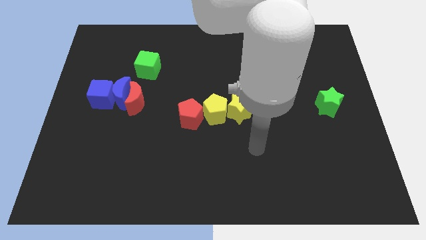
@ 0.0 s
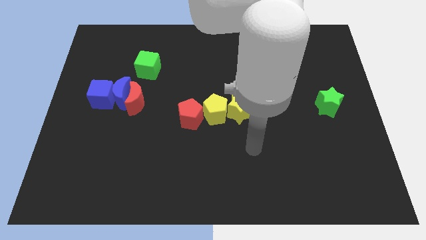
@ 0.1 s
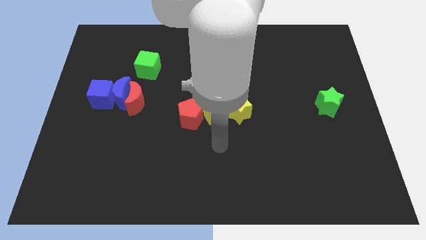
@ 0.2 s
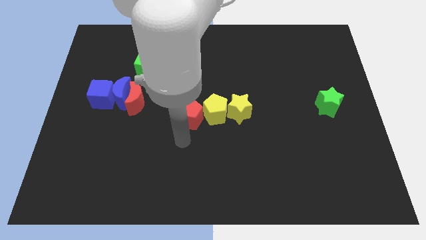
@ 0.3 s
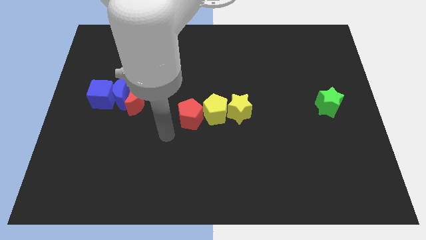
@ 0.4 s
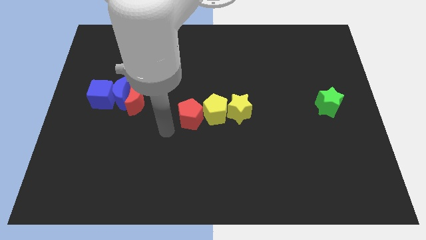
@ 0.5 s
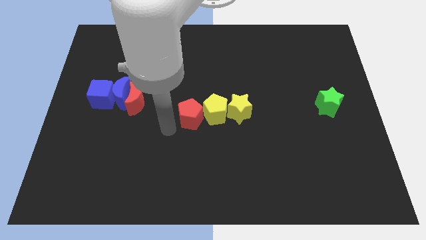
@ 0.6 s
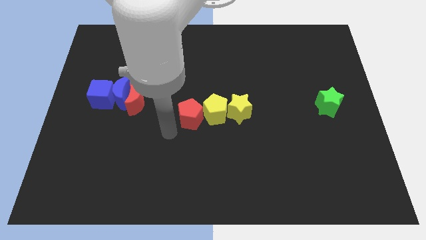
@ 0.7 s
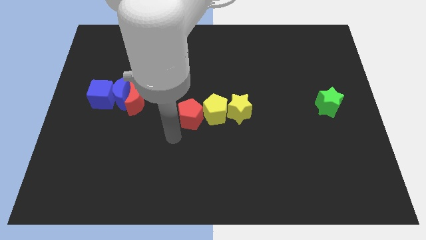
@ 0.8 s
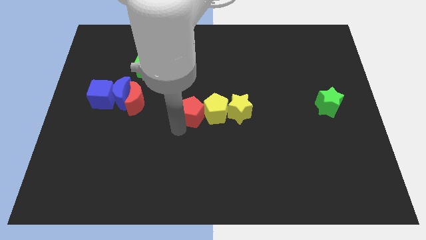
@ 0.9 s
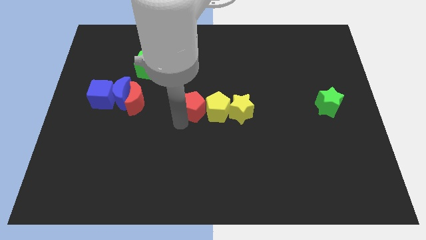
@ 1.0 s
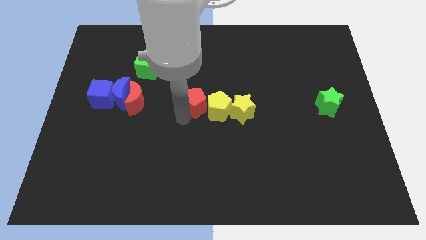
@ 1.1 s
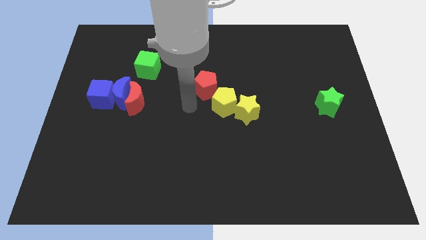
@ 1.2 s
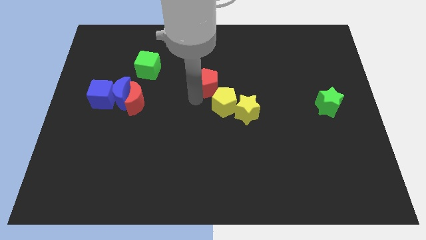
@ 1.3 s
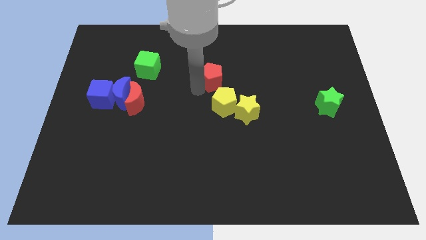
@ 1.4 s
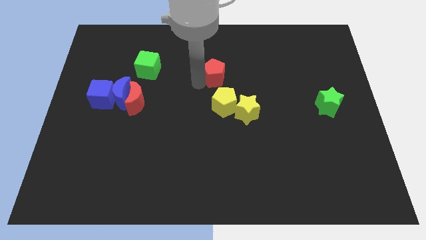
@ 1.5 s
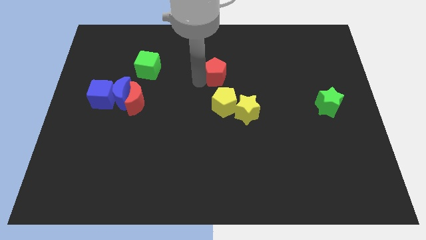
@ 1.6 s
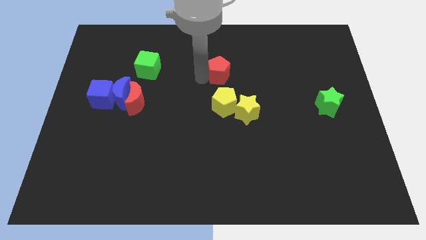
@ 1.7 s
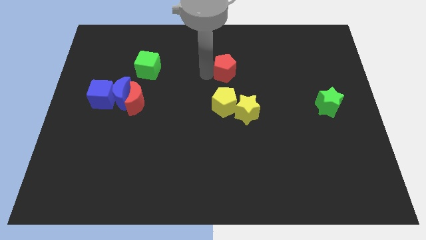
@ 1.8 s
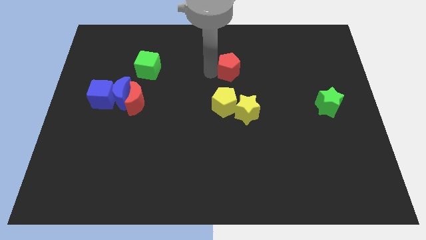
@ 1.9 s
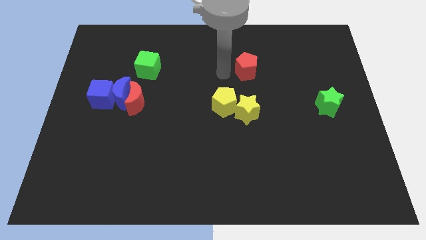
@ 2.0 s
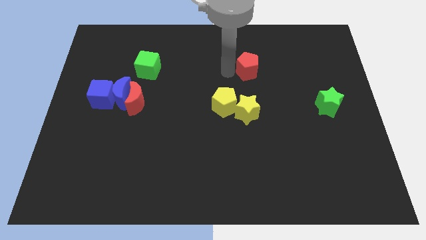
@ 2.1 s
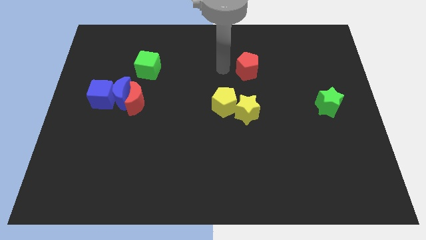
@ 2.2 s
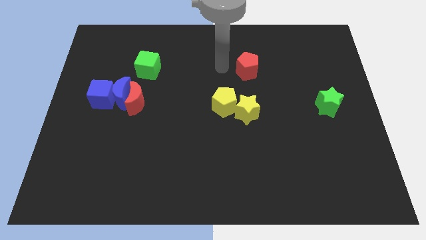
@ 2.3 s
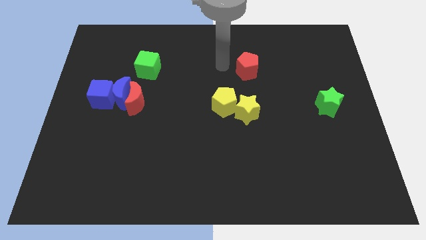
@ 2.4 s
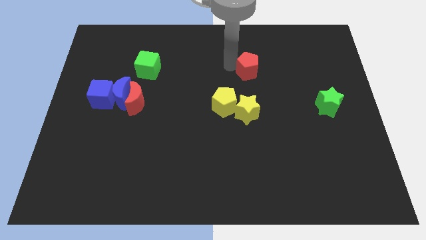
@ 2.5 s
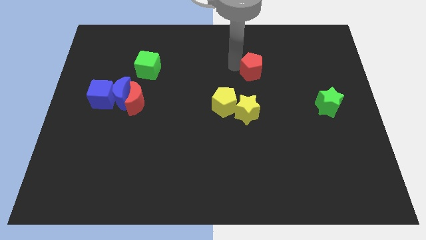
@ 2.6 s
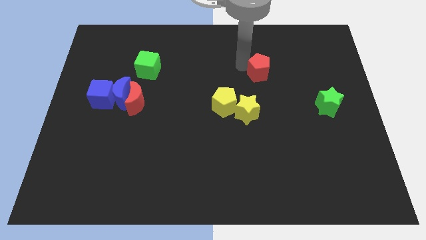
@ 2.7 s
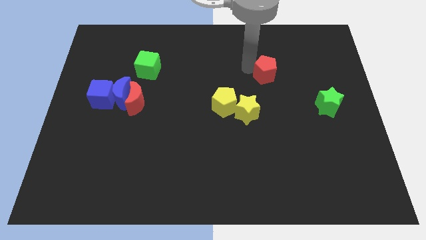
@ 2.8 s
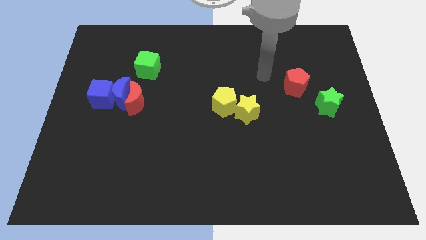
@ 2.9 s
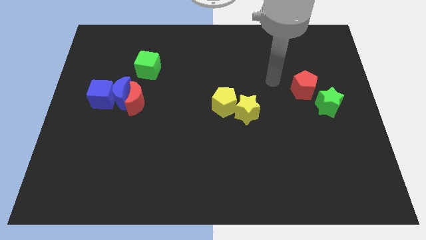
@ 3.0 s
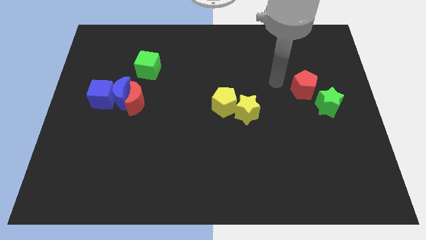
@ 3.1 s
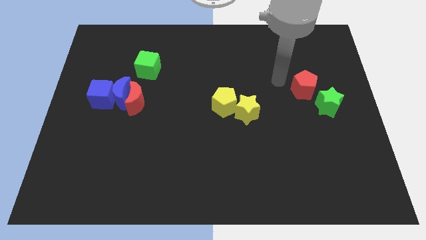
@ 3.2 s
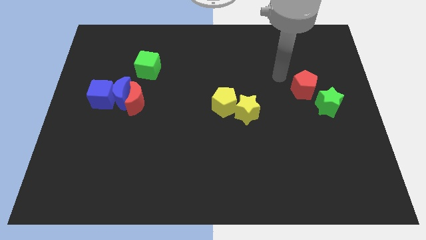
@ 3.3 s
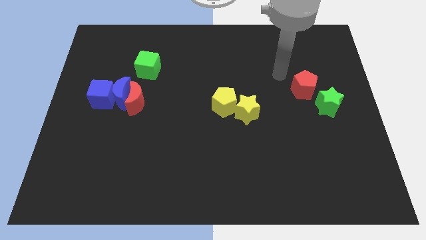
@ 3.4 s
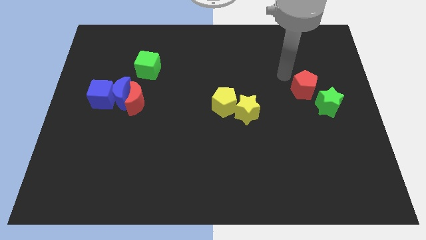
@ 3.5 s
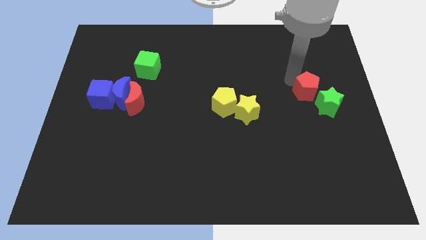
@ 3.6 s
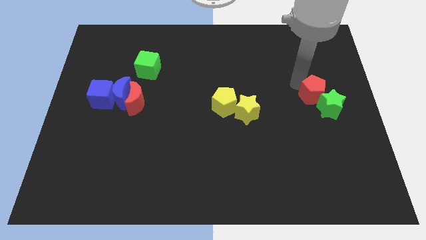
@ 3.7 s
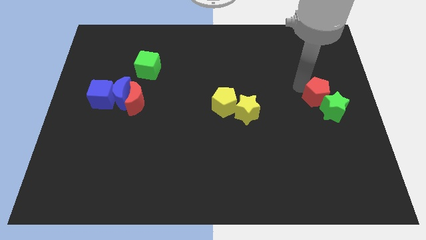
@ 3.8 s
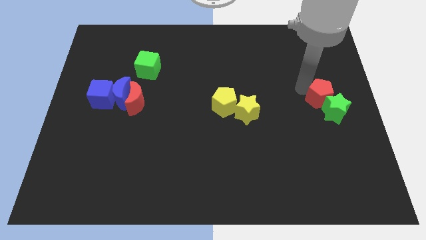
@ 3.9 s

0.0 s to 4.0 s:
slide the red pentagon to the green star

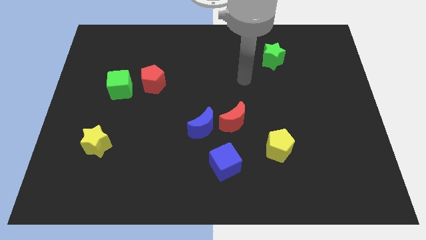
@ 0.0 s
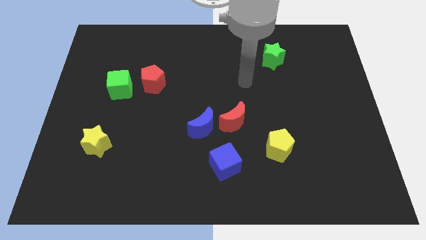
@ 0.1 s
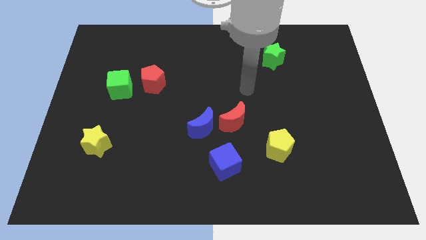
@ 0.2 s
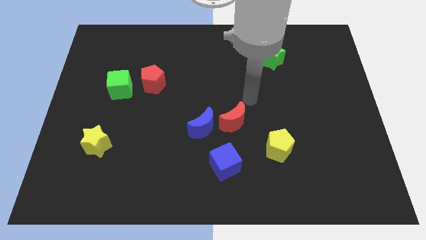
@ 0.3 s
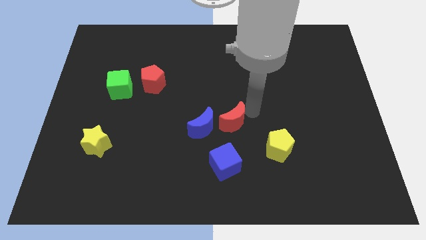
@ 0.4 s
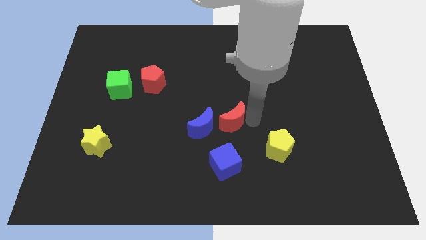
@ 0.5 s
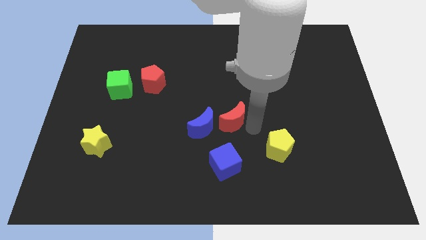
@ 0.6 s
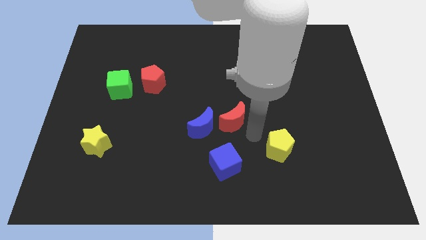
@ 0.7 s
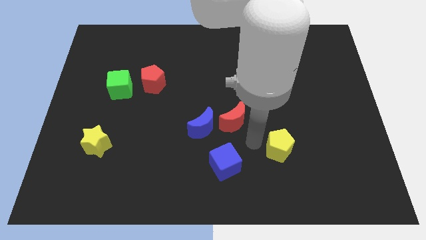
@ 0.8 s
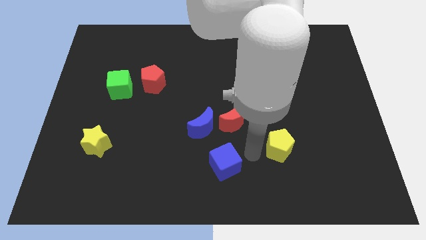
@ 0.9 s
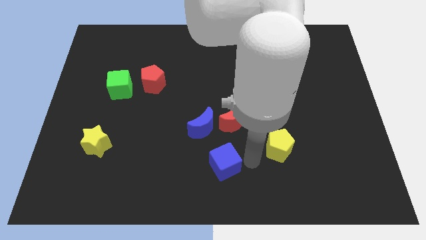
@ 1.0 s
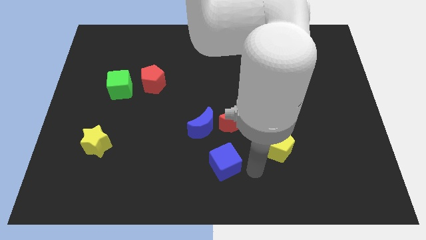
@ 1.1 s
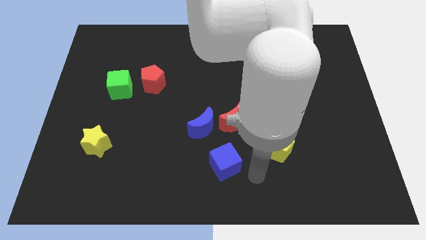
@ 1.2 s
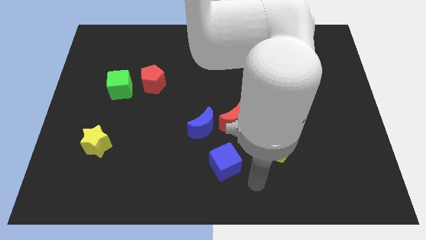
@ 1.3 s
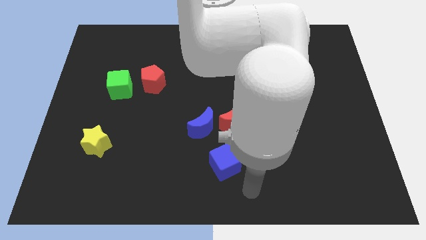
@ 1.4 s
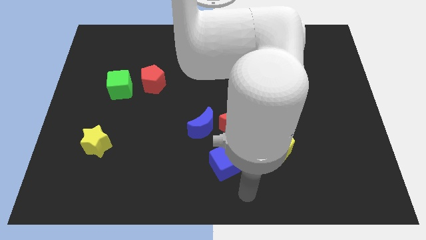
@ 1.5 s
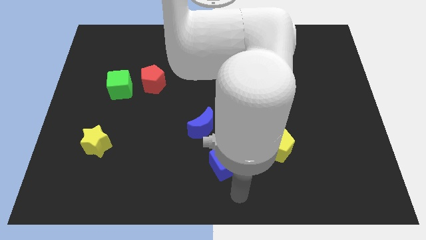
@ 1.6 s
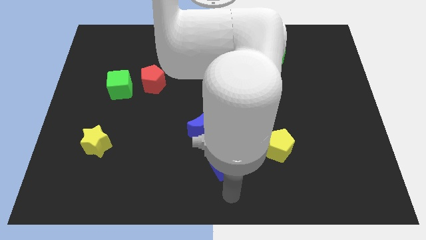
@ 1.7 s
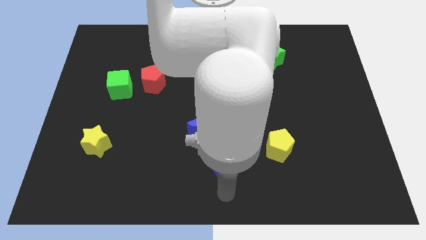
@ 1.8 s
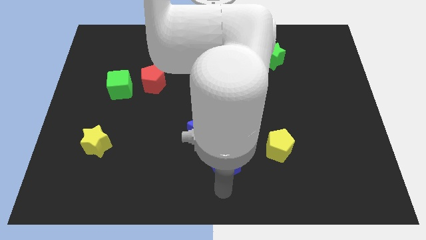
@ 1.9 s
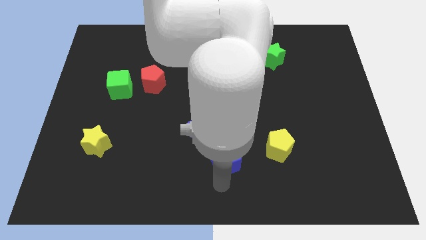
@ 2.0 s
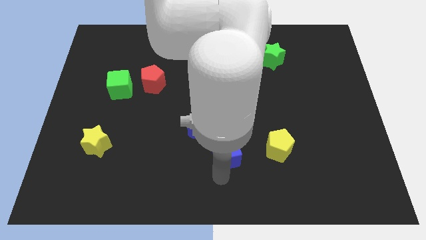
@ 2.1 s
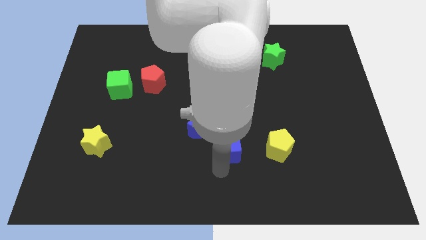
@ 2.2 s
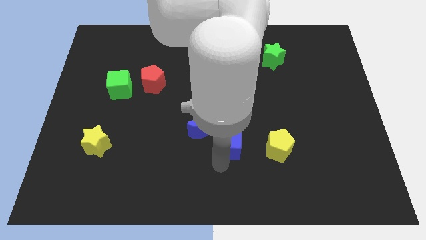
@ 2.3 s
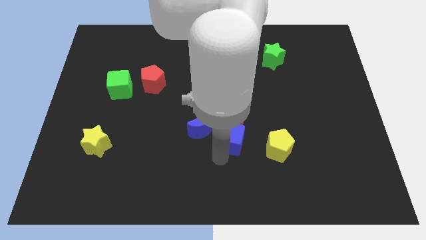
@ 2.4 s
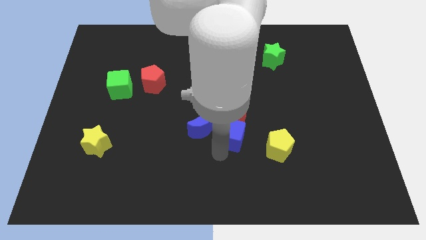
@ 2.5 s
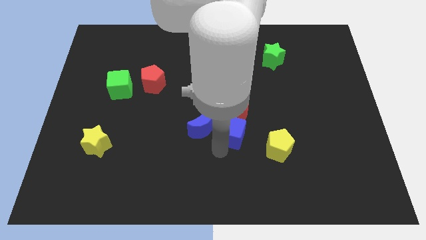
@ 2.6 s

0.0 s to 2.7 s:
put the blue cube close to the red moon

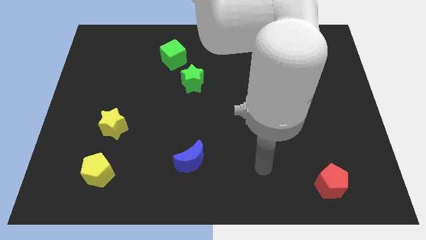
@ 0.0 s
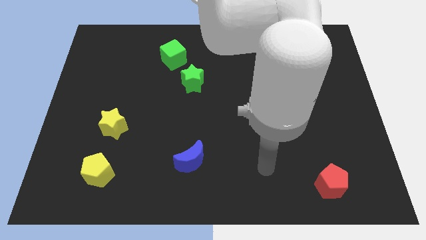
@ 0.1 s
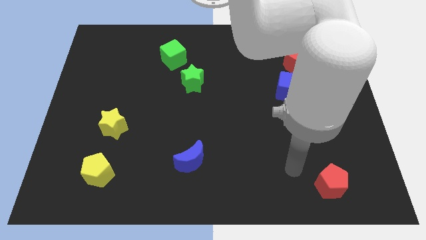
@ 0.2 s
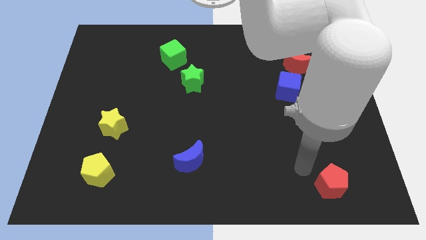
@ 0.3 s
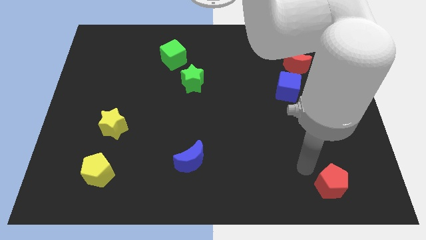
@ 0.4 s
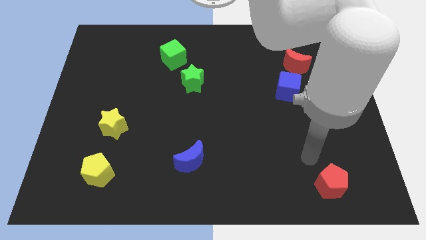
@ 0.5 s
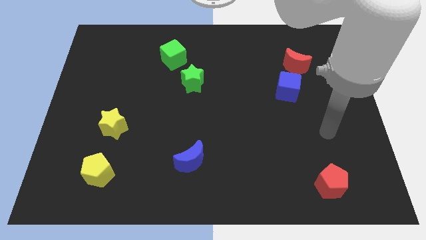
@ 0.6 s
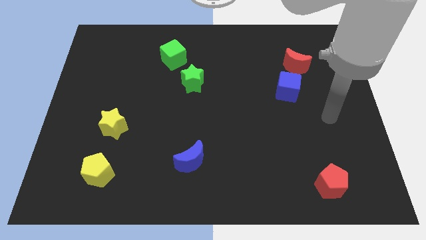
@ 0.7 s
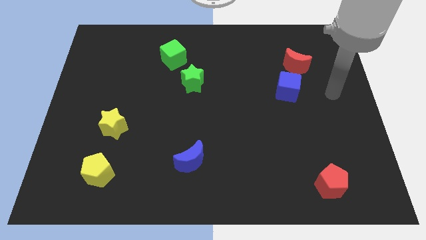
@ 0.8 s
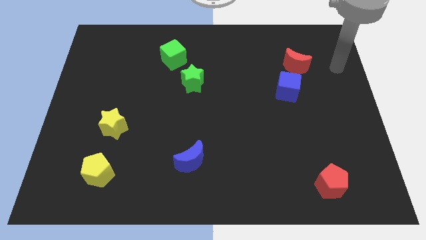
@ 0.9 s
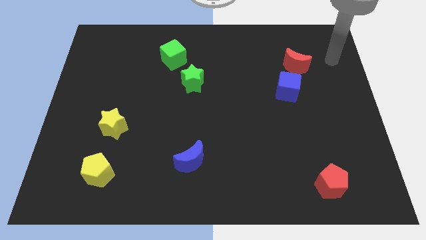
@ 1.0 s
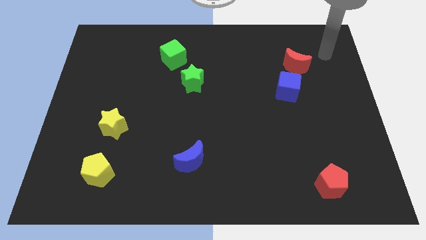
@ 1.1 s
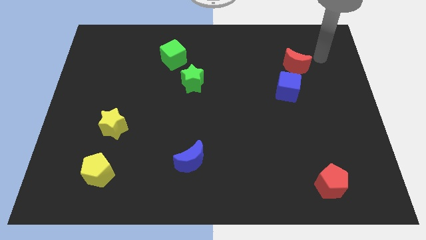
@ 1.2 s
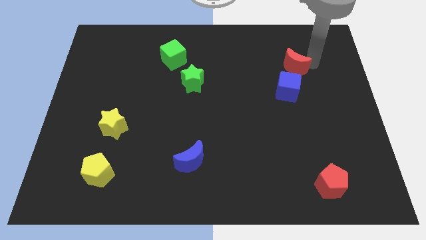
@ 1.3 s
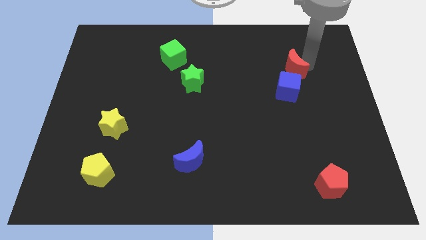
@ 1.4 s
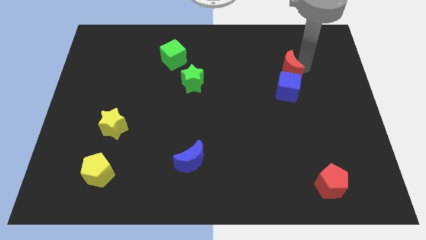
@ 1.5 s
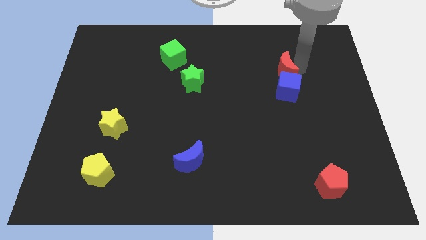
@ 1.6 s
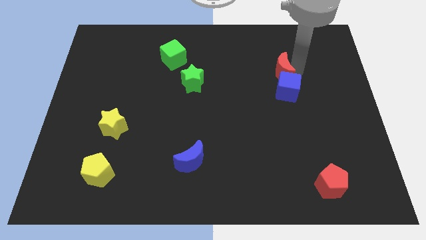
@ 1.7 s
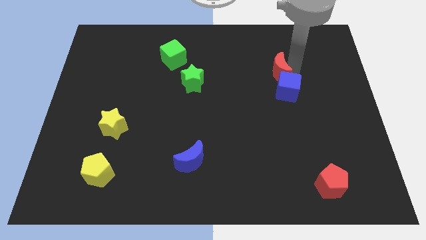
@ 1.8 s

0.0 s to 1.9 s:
push the red moon close to the blue cube
